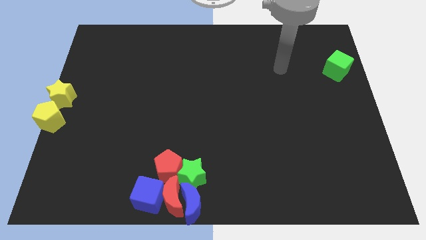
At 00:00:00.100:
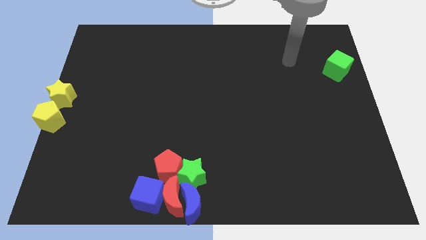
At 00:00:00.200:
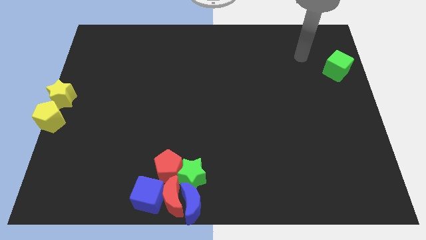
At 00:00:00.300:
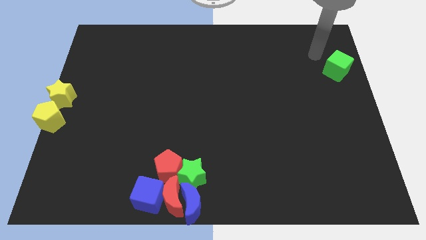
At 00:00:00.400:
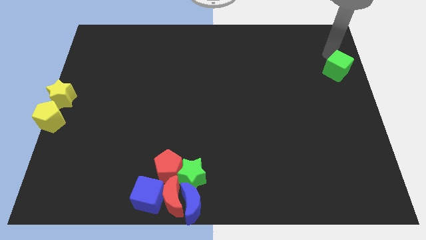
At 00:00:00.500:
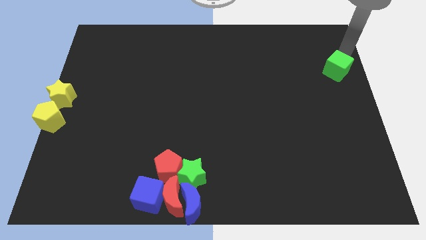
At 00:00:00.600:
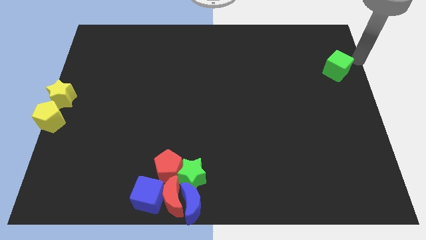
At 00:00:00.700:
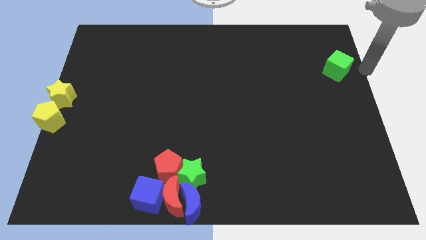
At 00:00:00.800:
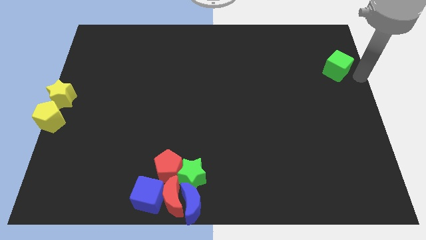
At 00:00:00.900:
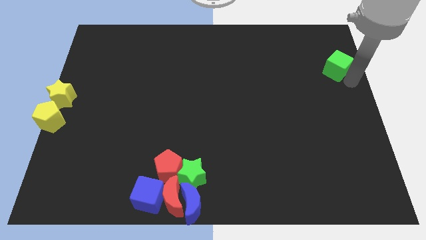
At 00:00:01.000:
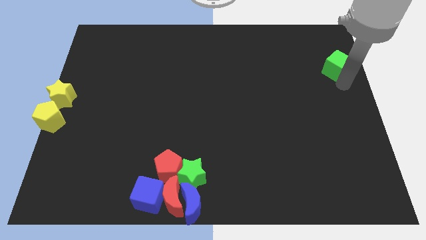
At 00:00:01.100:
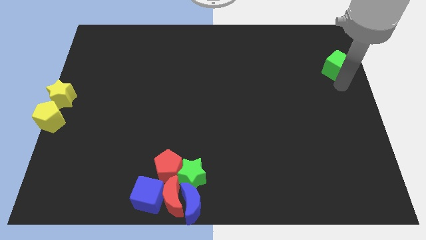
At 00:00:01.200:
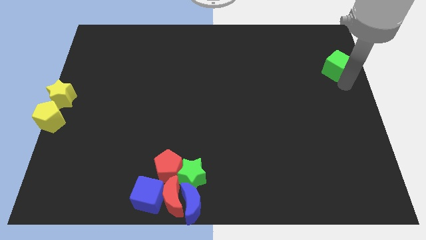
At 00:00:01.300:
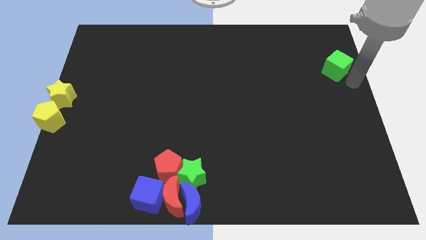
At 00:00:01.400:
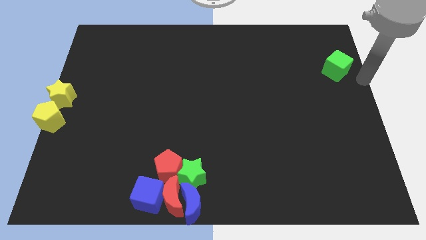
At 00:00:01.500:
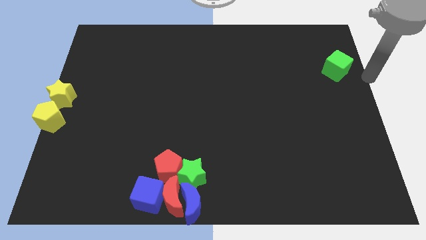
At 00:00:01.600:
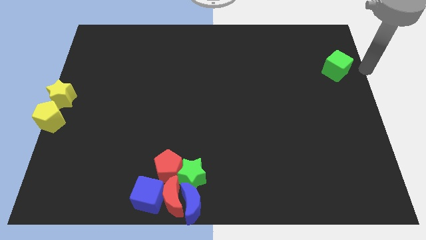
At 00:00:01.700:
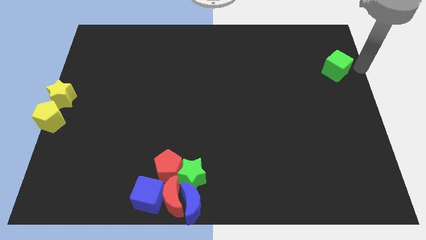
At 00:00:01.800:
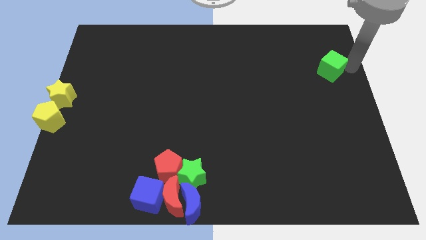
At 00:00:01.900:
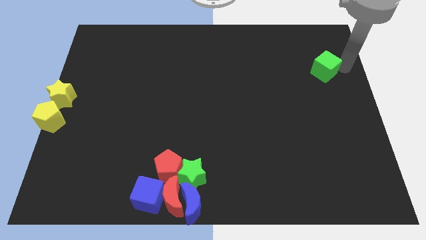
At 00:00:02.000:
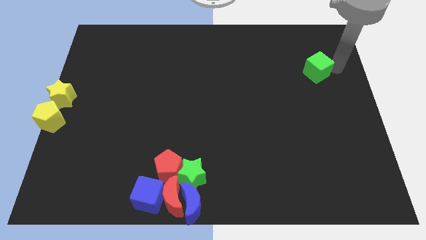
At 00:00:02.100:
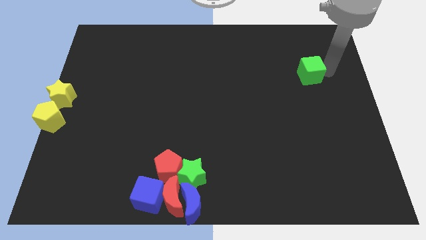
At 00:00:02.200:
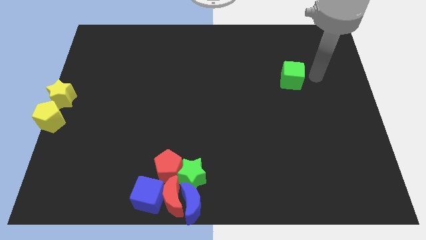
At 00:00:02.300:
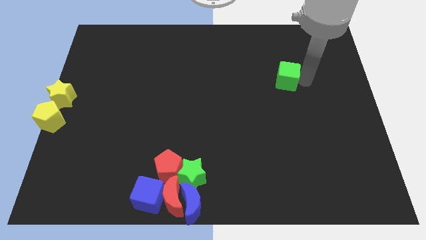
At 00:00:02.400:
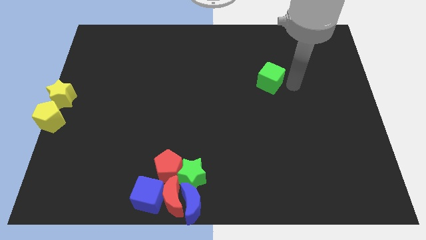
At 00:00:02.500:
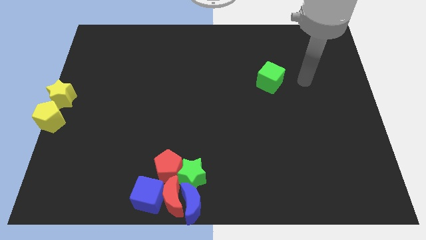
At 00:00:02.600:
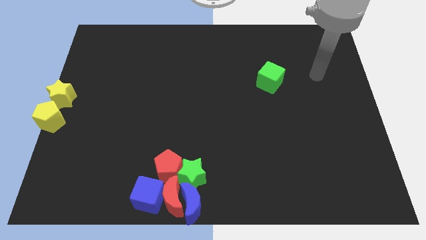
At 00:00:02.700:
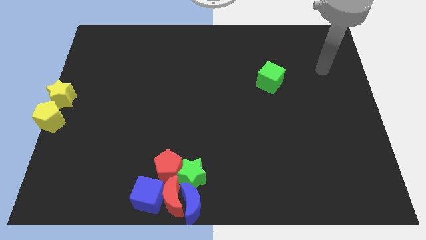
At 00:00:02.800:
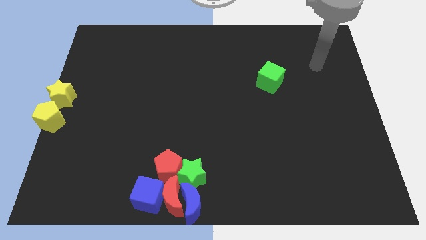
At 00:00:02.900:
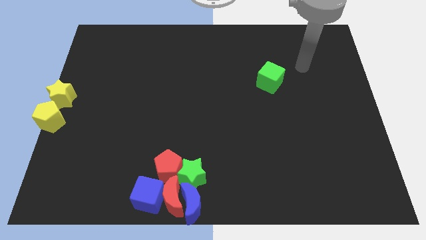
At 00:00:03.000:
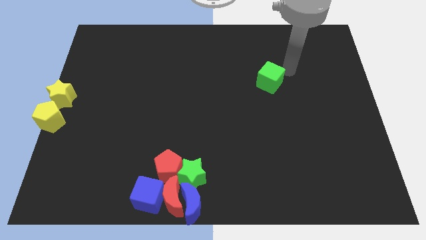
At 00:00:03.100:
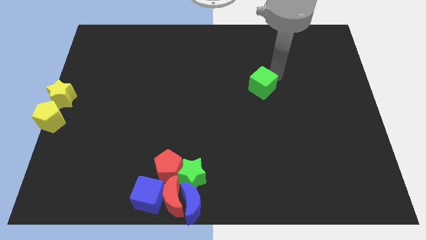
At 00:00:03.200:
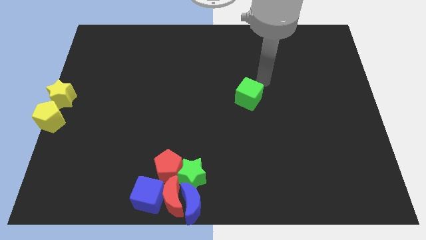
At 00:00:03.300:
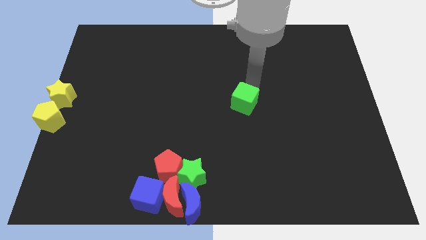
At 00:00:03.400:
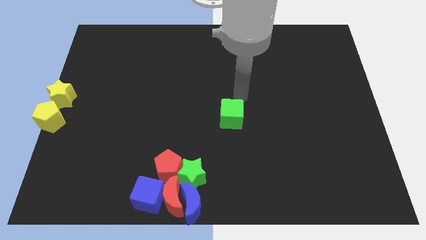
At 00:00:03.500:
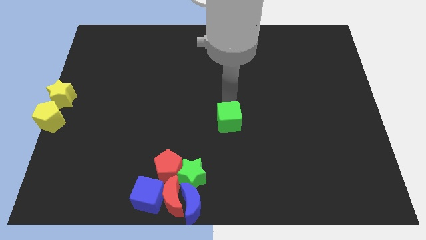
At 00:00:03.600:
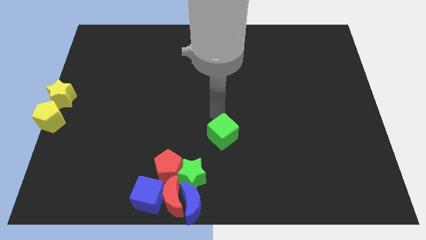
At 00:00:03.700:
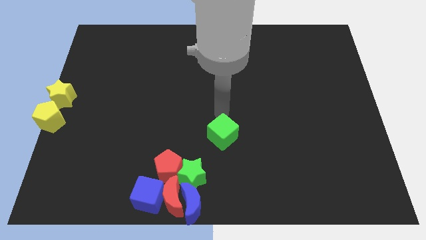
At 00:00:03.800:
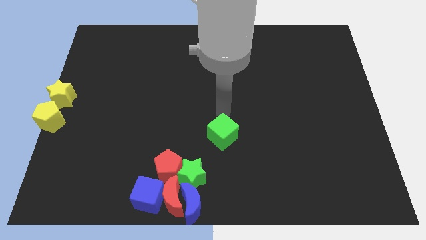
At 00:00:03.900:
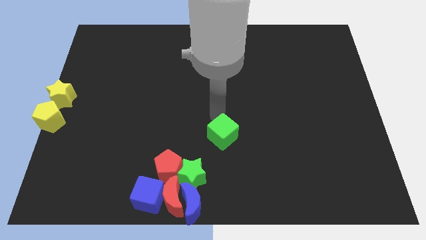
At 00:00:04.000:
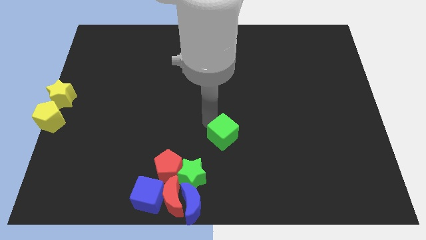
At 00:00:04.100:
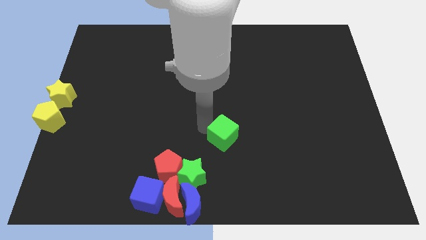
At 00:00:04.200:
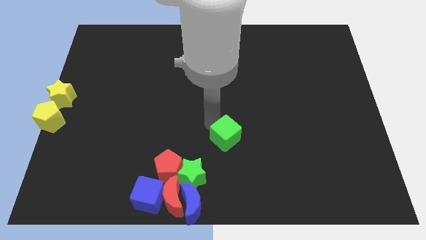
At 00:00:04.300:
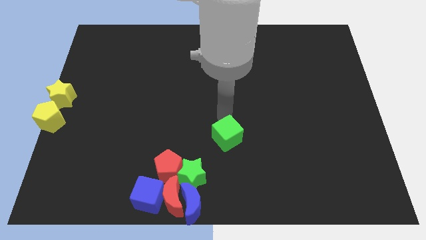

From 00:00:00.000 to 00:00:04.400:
move the green cube diagonally to the top right of the green star

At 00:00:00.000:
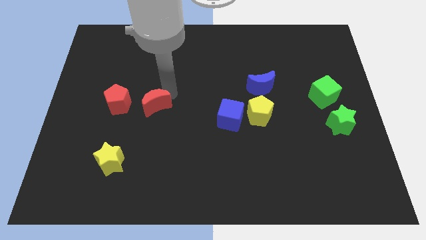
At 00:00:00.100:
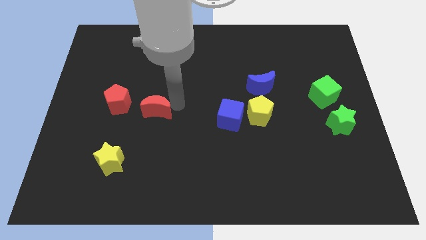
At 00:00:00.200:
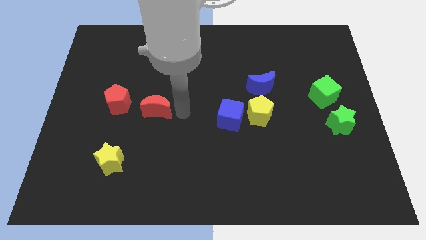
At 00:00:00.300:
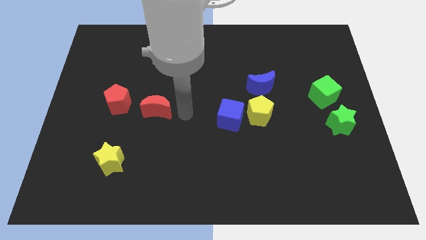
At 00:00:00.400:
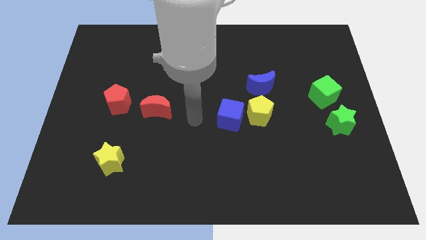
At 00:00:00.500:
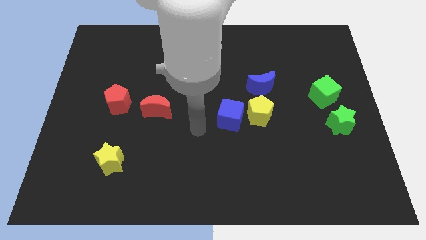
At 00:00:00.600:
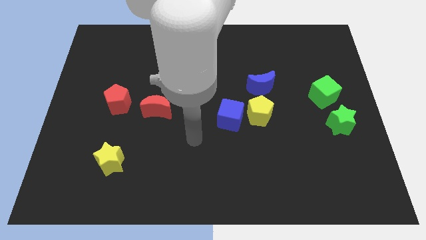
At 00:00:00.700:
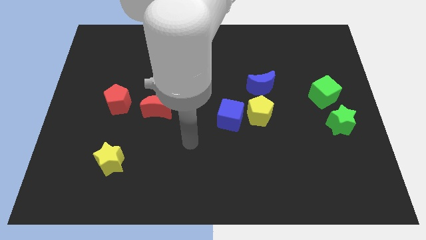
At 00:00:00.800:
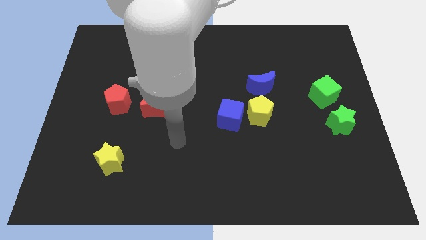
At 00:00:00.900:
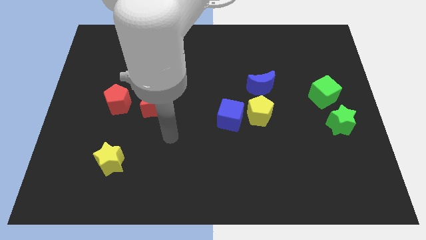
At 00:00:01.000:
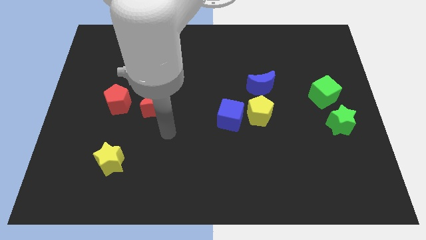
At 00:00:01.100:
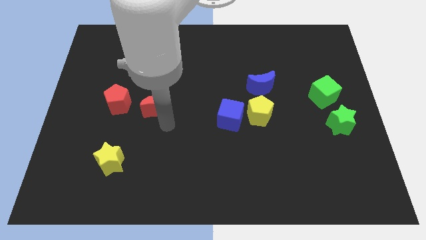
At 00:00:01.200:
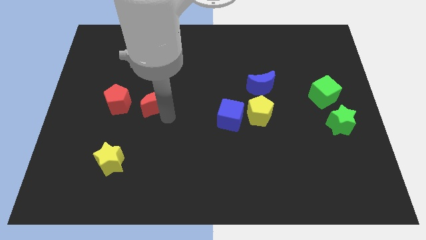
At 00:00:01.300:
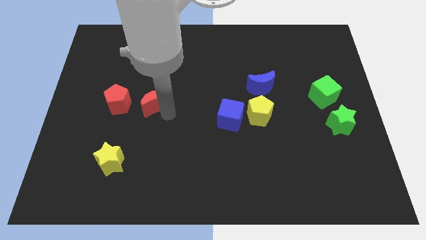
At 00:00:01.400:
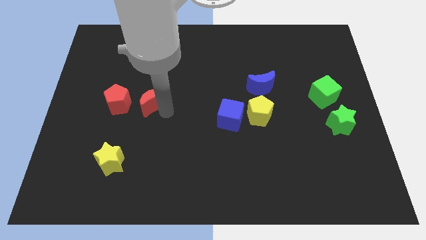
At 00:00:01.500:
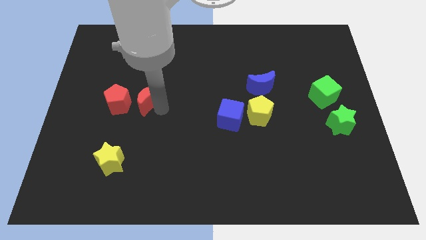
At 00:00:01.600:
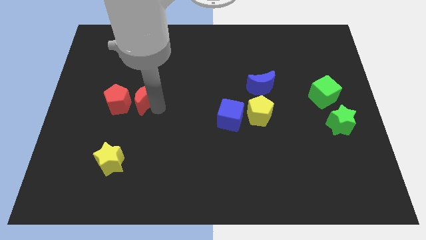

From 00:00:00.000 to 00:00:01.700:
slightly push the red crescent towards the red pentagon

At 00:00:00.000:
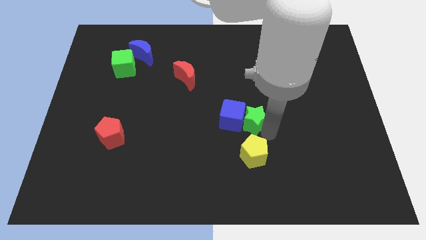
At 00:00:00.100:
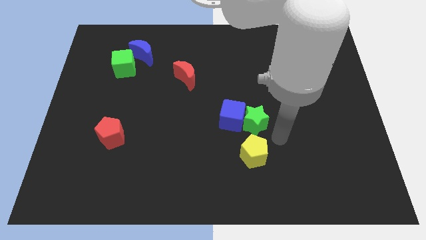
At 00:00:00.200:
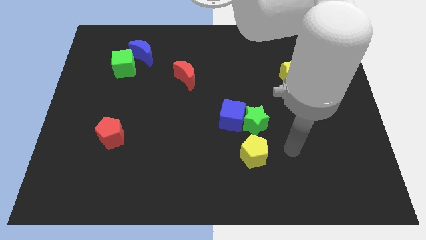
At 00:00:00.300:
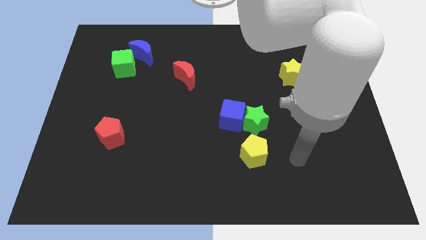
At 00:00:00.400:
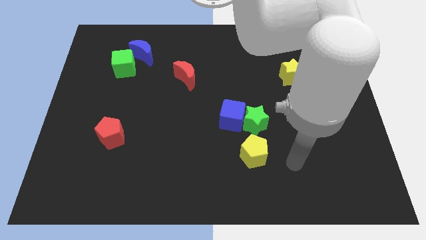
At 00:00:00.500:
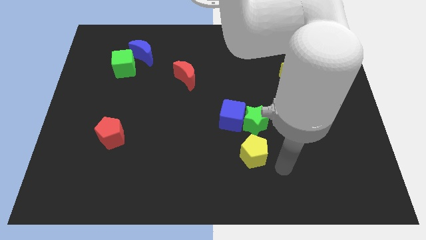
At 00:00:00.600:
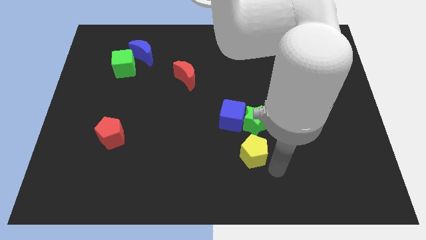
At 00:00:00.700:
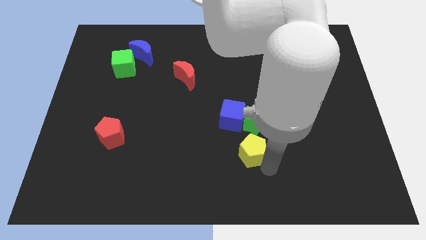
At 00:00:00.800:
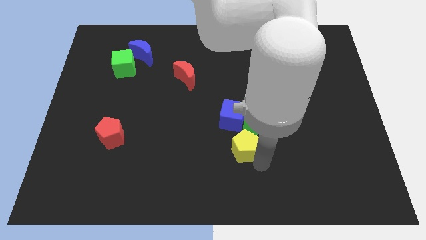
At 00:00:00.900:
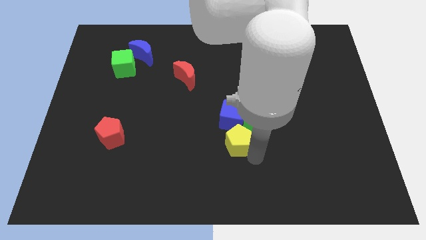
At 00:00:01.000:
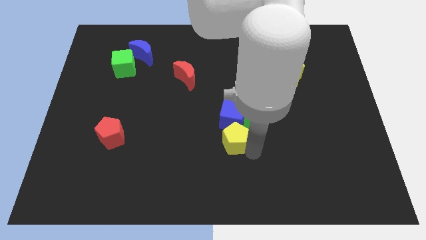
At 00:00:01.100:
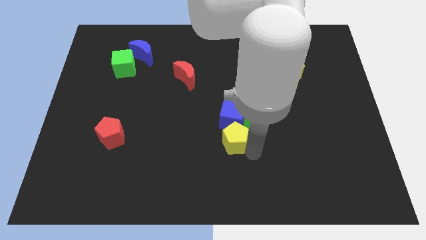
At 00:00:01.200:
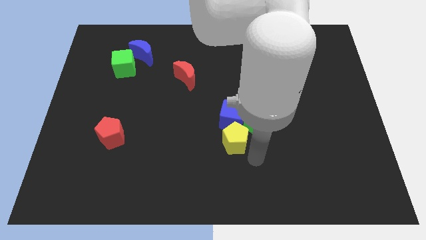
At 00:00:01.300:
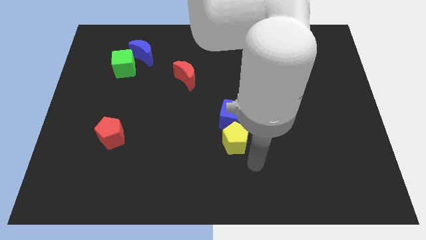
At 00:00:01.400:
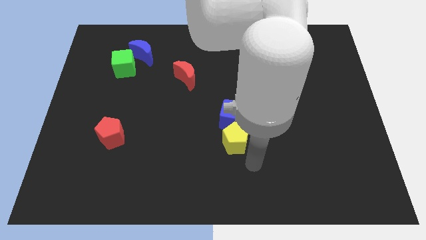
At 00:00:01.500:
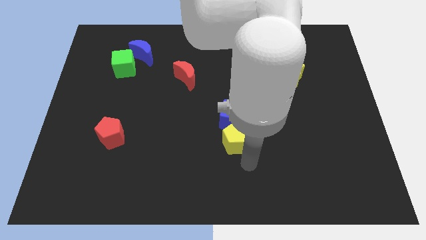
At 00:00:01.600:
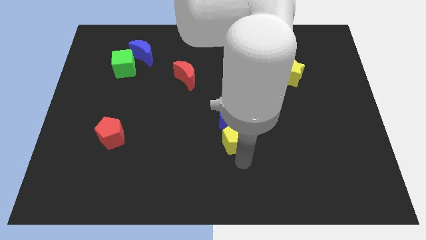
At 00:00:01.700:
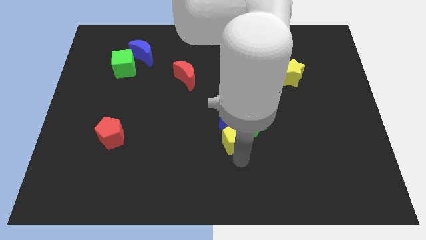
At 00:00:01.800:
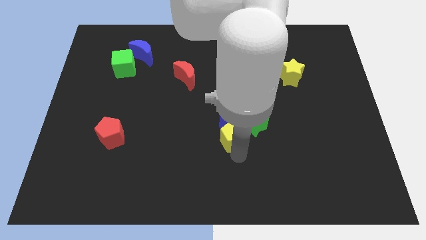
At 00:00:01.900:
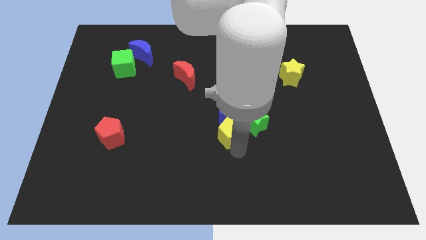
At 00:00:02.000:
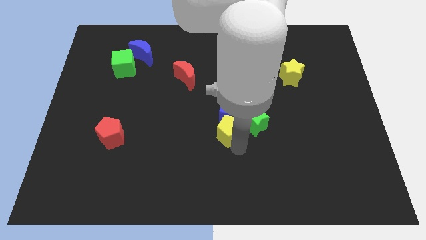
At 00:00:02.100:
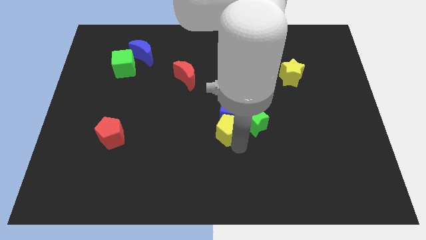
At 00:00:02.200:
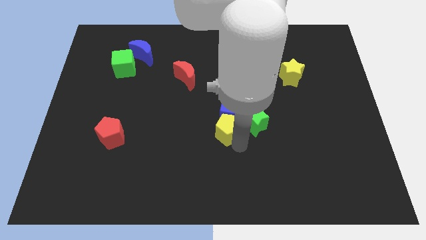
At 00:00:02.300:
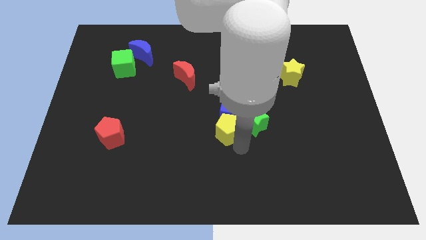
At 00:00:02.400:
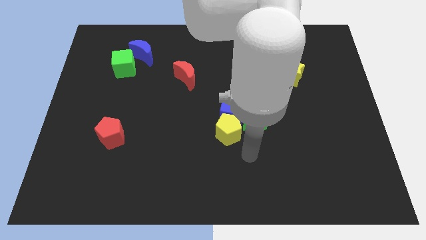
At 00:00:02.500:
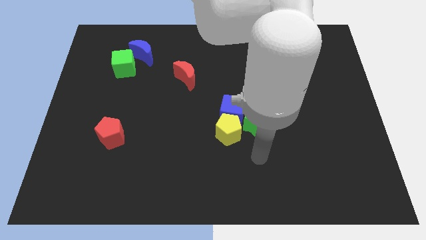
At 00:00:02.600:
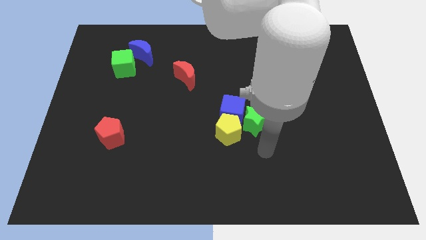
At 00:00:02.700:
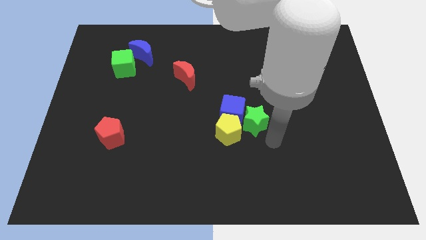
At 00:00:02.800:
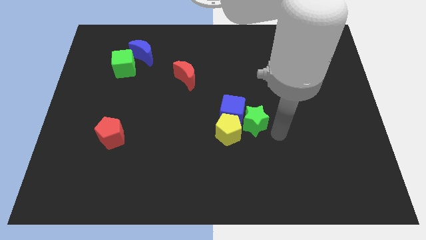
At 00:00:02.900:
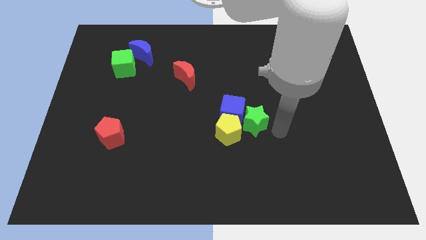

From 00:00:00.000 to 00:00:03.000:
push the yellow pentagon into blue cube
